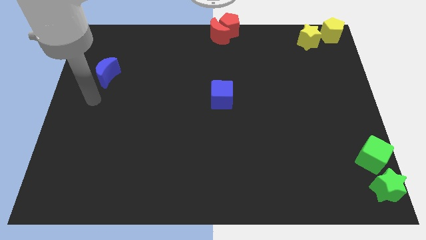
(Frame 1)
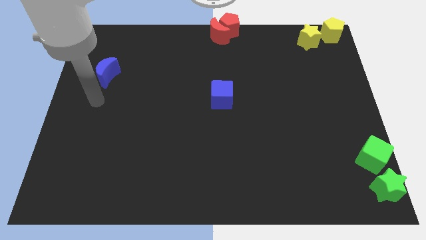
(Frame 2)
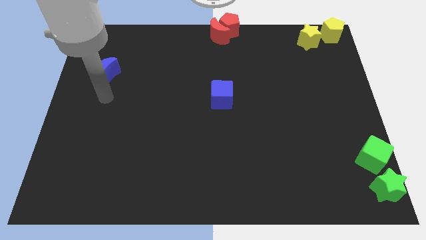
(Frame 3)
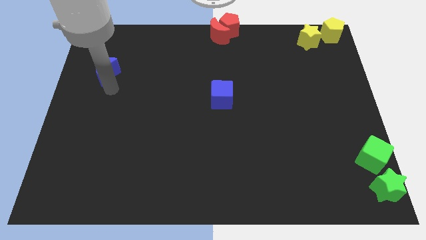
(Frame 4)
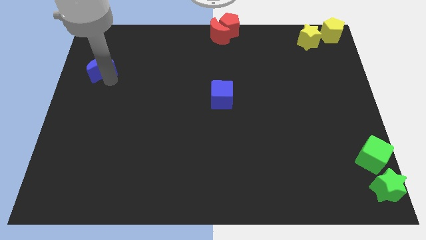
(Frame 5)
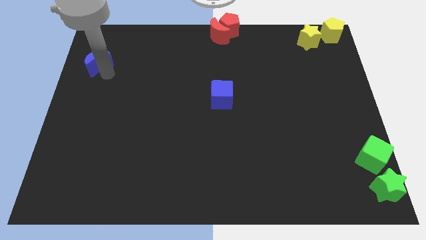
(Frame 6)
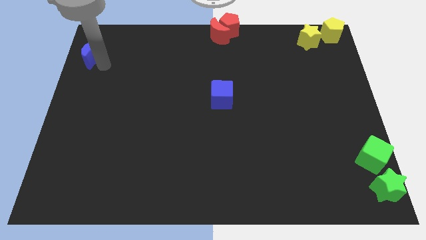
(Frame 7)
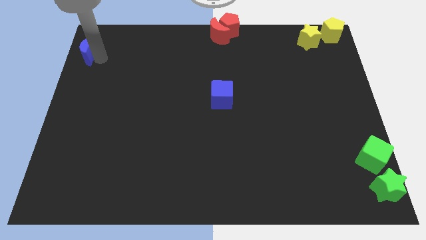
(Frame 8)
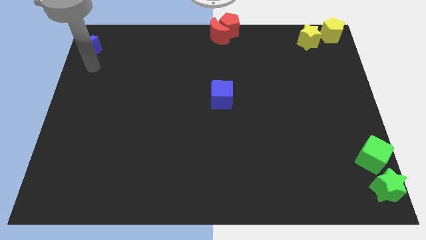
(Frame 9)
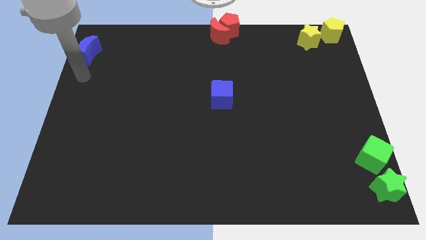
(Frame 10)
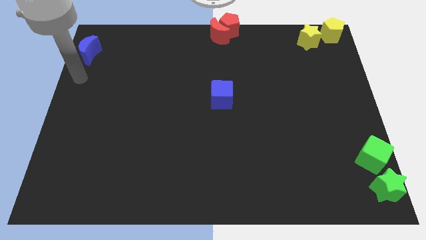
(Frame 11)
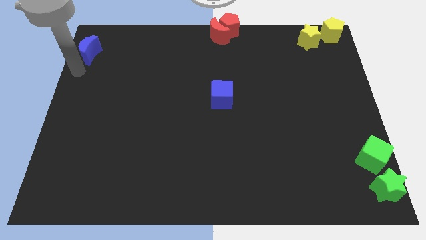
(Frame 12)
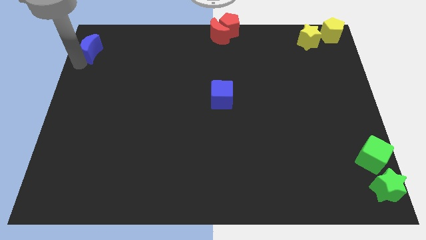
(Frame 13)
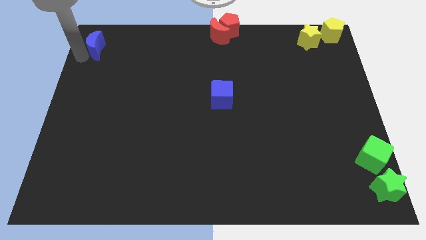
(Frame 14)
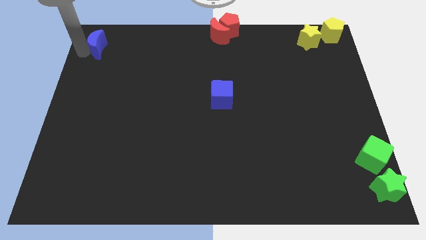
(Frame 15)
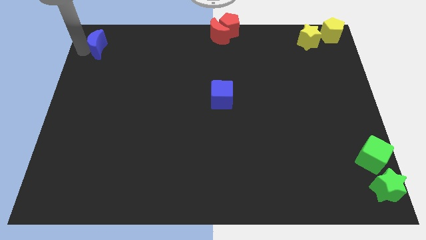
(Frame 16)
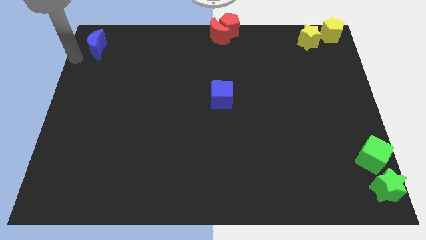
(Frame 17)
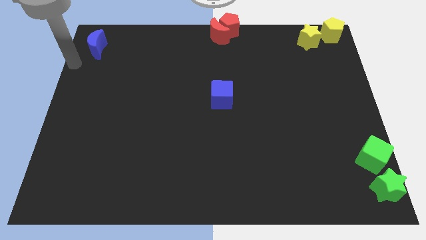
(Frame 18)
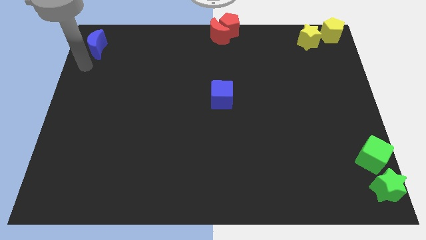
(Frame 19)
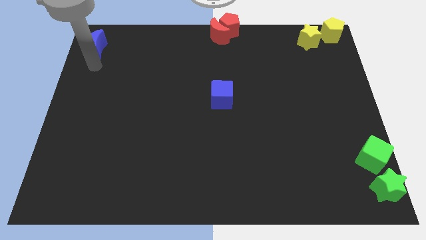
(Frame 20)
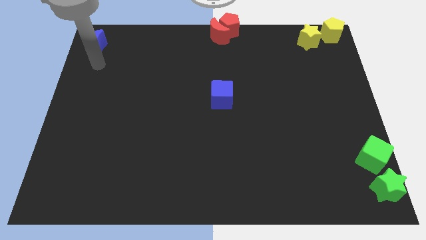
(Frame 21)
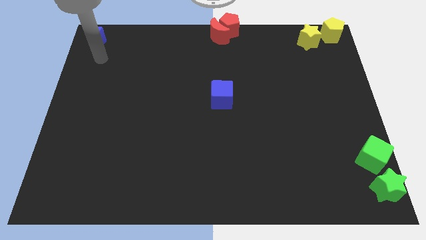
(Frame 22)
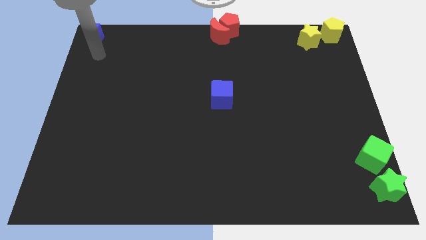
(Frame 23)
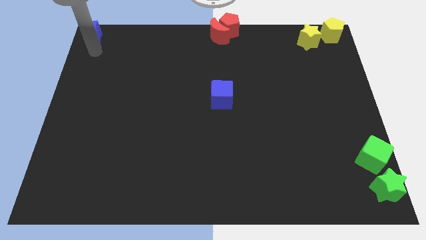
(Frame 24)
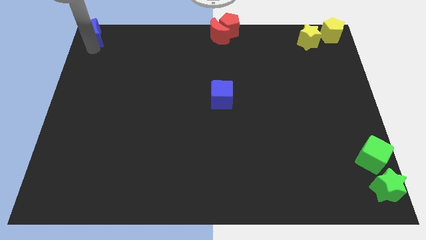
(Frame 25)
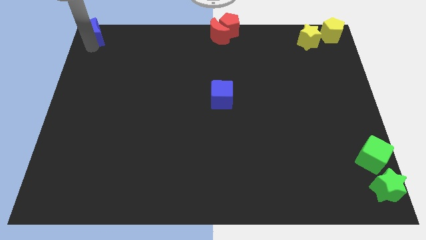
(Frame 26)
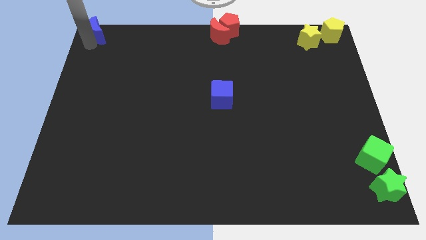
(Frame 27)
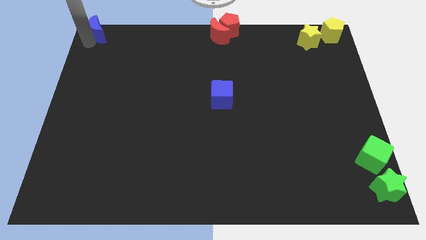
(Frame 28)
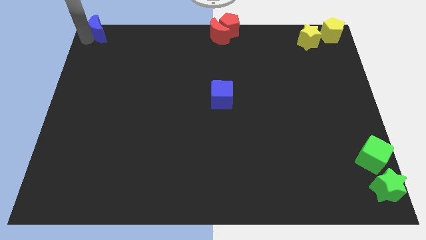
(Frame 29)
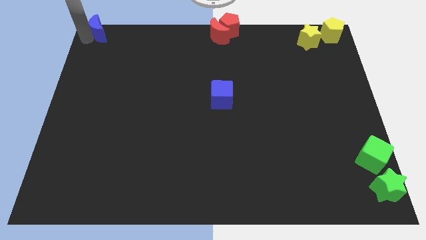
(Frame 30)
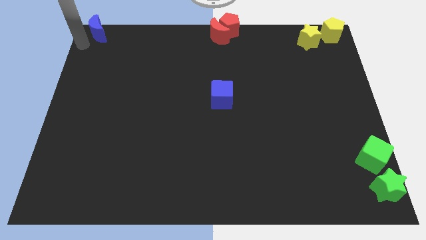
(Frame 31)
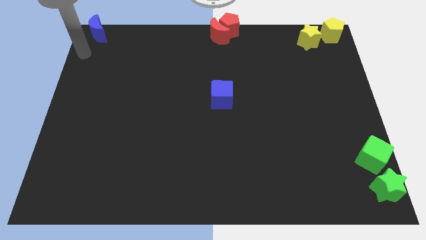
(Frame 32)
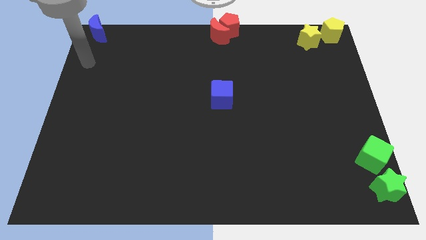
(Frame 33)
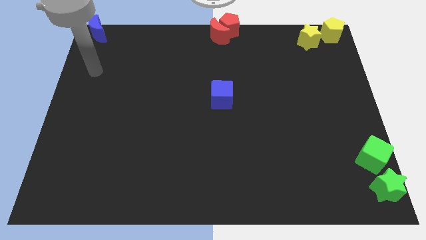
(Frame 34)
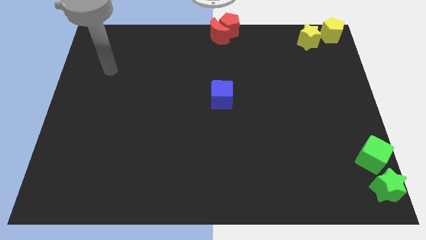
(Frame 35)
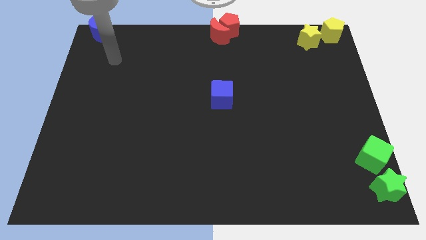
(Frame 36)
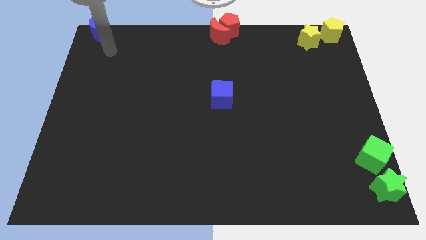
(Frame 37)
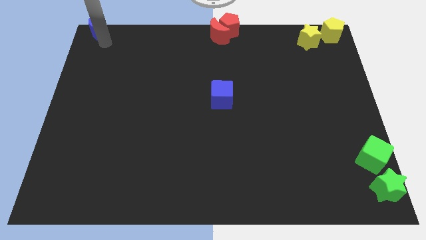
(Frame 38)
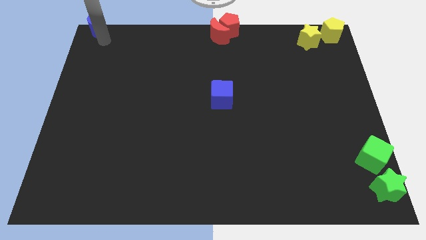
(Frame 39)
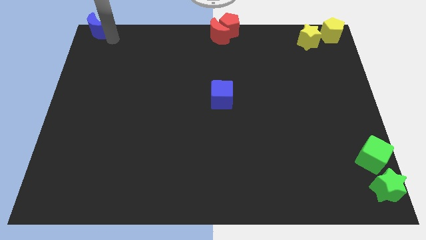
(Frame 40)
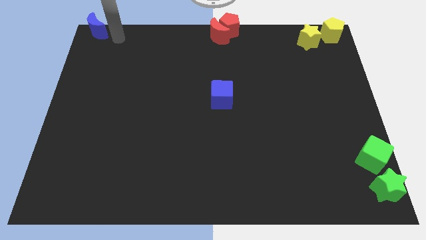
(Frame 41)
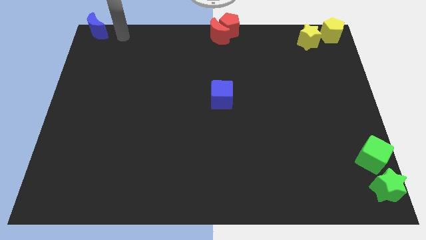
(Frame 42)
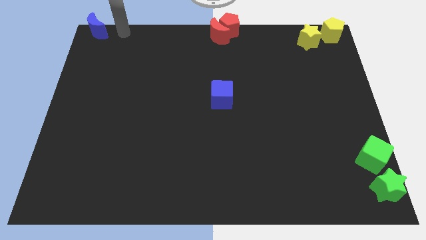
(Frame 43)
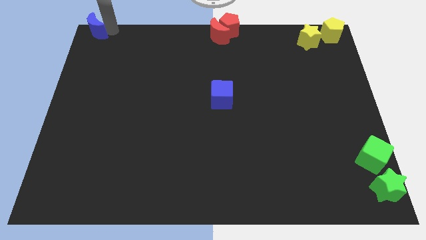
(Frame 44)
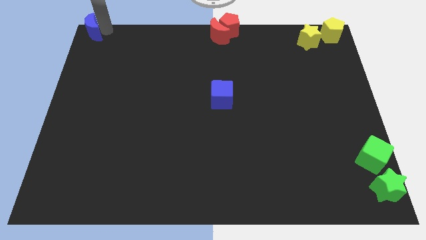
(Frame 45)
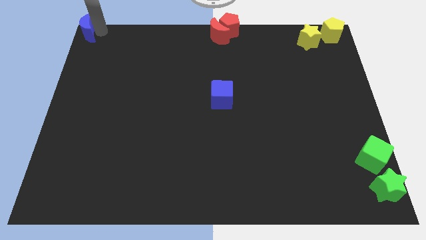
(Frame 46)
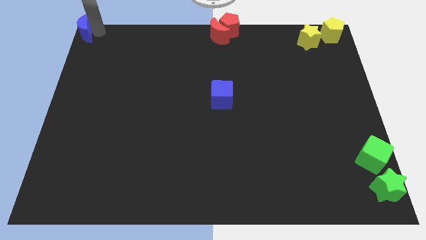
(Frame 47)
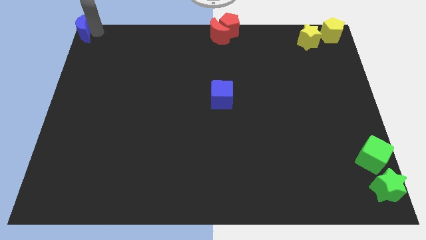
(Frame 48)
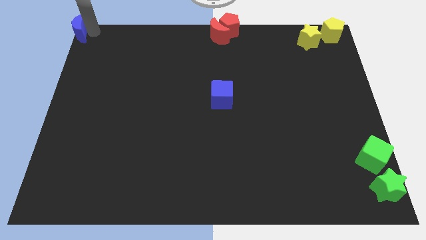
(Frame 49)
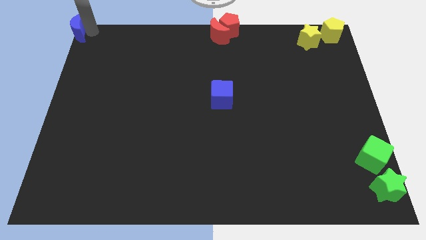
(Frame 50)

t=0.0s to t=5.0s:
bring the blue crescent at the top left corner of the board

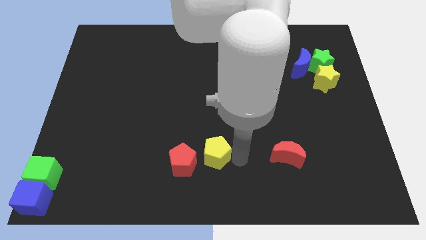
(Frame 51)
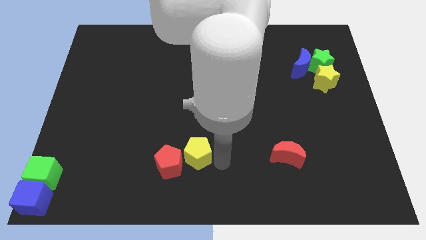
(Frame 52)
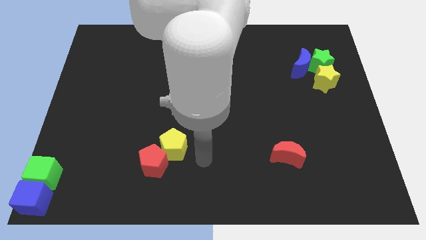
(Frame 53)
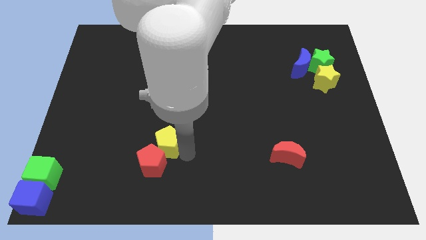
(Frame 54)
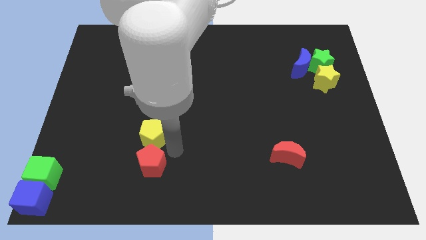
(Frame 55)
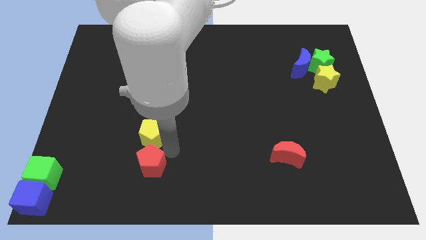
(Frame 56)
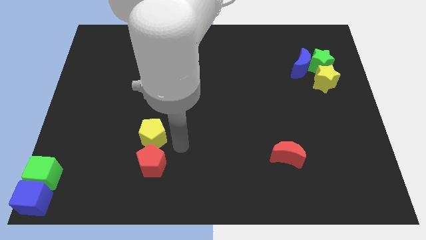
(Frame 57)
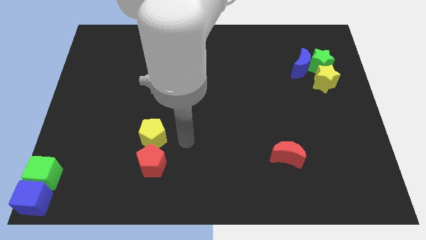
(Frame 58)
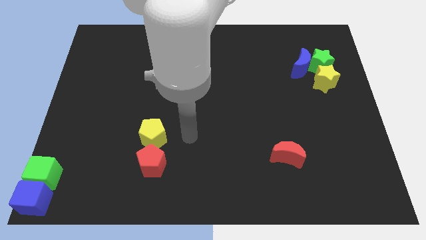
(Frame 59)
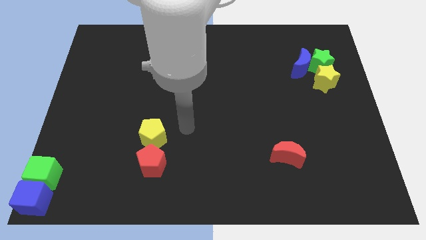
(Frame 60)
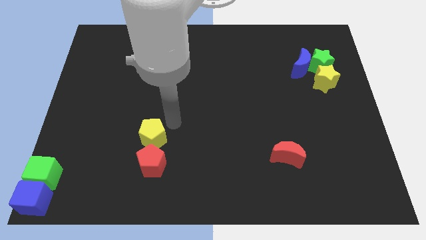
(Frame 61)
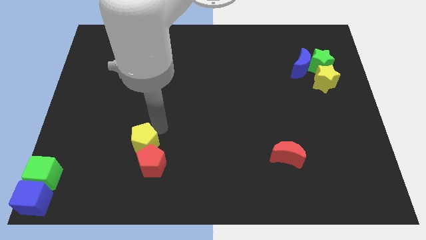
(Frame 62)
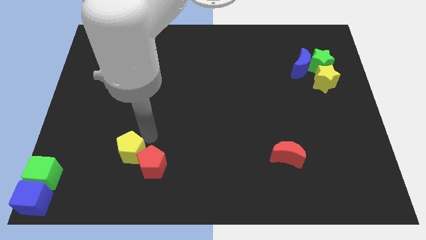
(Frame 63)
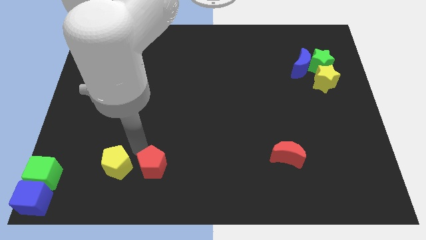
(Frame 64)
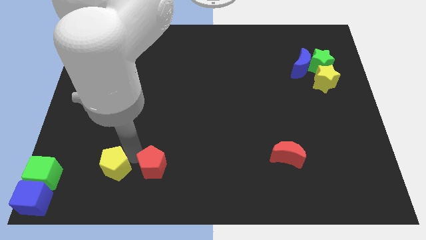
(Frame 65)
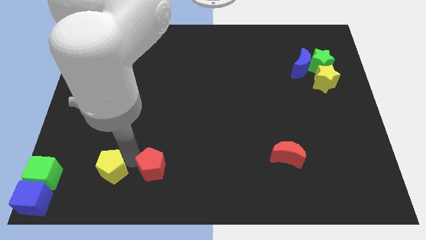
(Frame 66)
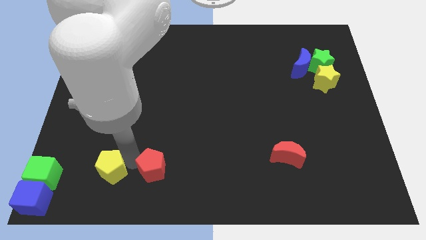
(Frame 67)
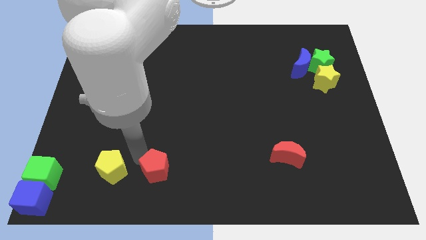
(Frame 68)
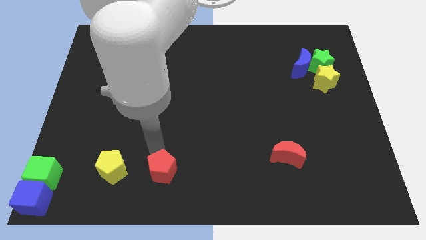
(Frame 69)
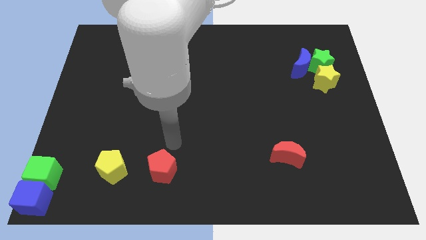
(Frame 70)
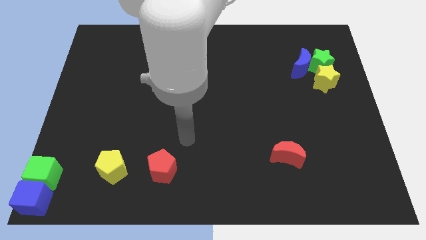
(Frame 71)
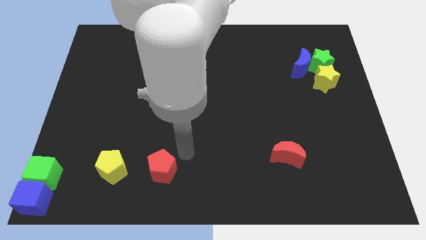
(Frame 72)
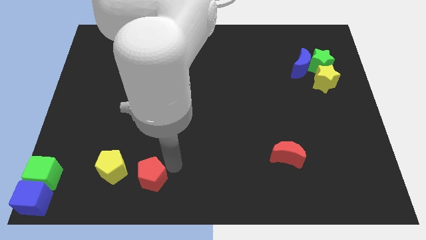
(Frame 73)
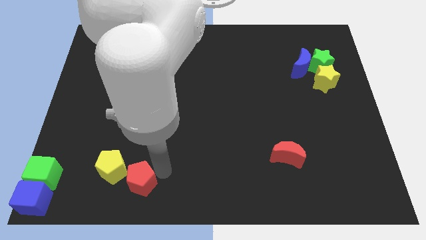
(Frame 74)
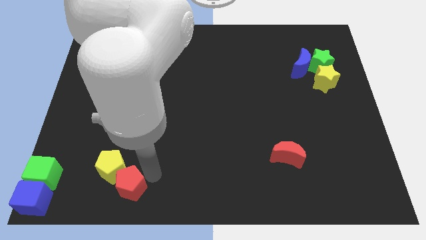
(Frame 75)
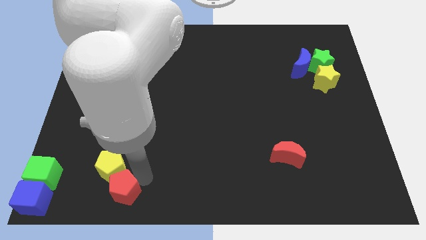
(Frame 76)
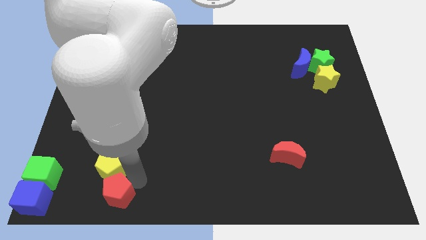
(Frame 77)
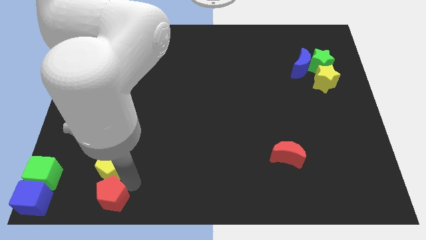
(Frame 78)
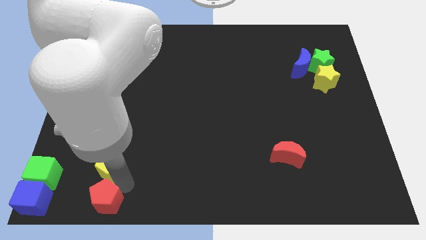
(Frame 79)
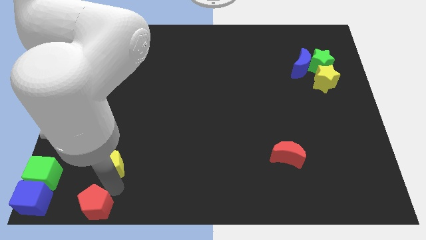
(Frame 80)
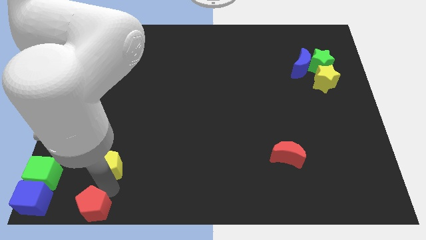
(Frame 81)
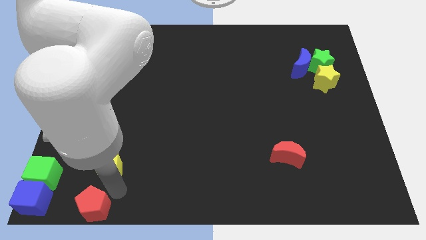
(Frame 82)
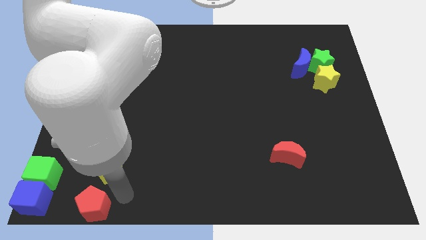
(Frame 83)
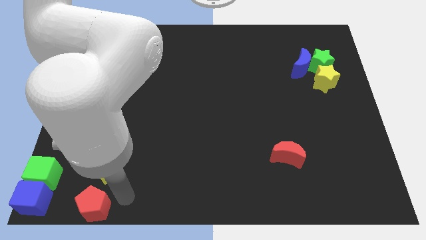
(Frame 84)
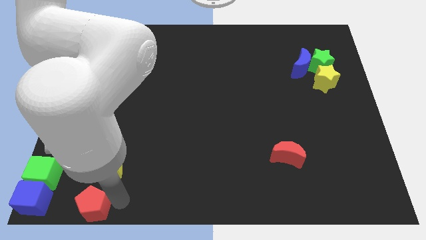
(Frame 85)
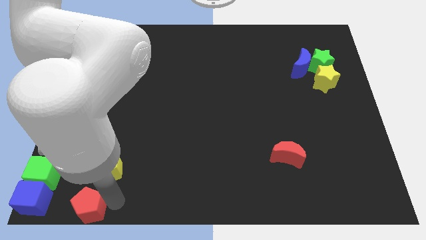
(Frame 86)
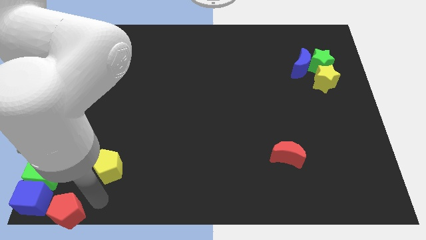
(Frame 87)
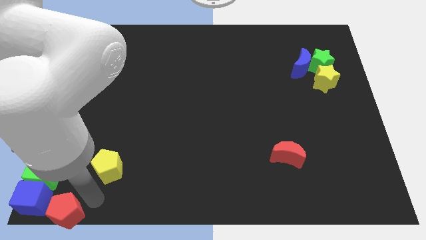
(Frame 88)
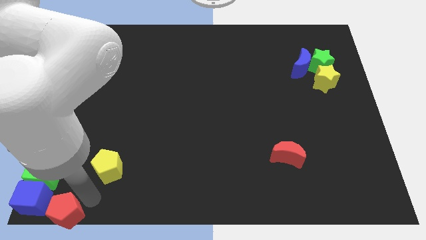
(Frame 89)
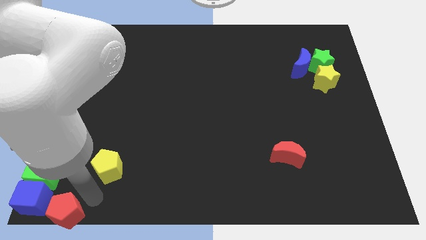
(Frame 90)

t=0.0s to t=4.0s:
move the red pentagon with yellow pentagon to the left of the board
